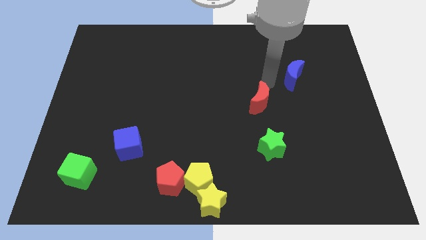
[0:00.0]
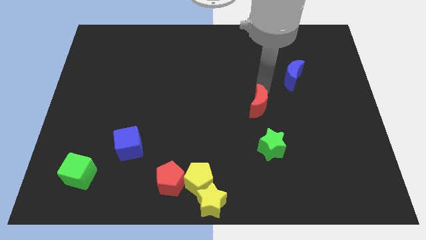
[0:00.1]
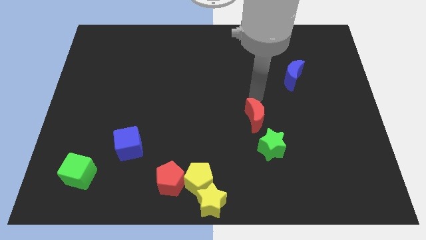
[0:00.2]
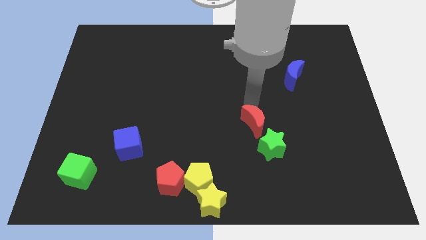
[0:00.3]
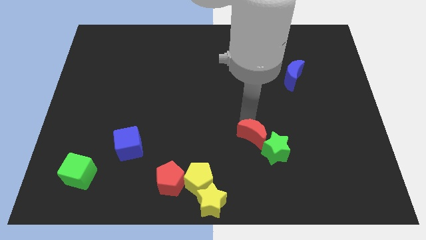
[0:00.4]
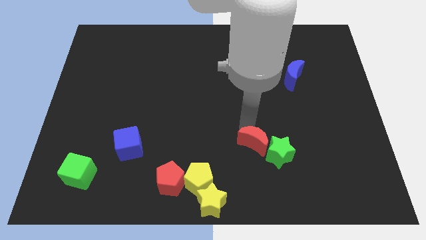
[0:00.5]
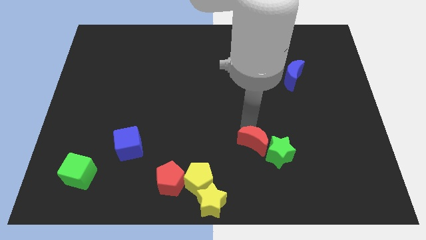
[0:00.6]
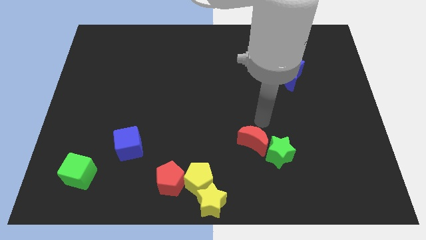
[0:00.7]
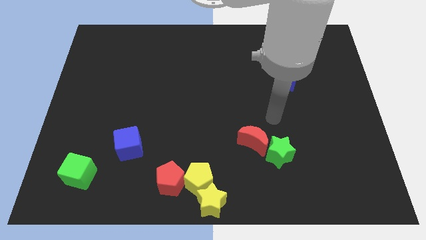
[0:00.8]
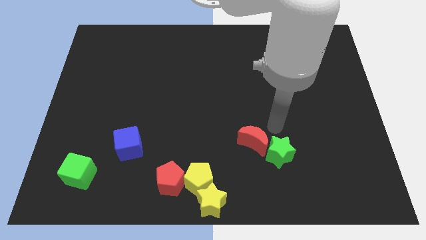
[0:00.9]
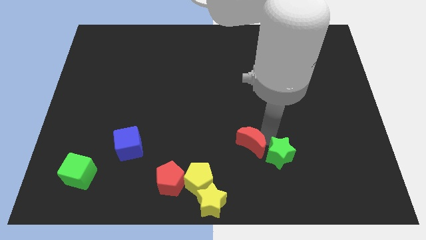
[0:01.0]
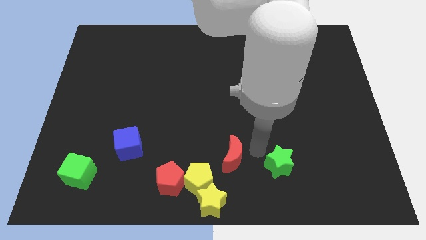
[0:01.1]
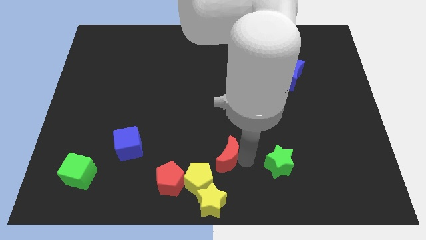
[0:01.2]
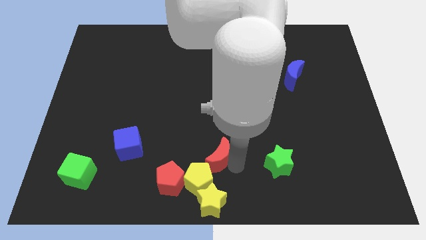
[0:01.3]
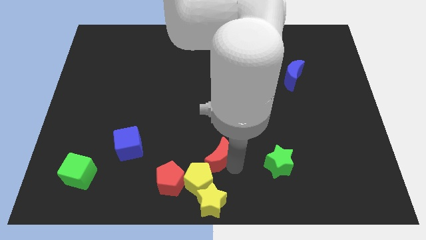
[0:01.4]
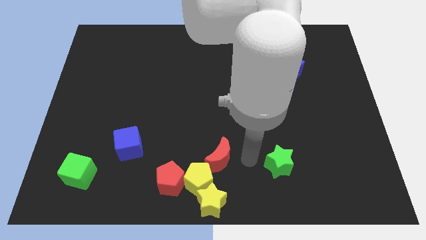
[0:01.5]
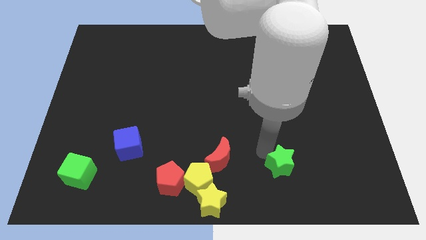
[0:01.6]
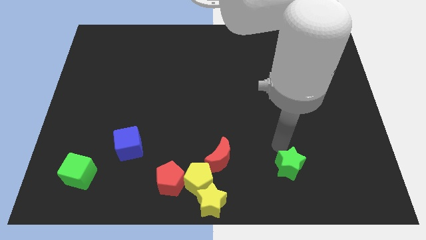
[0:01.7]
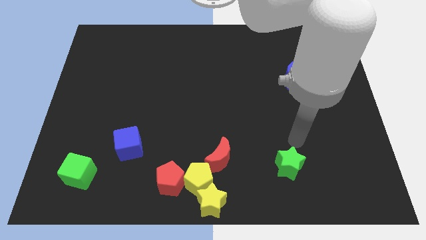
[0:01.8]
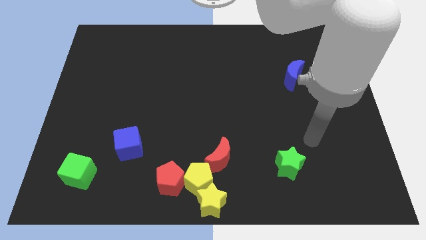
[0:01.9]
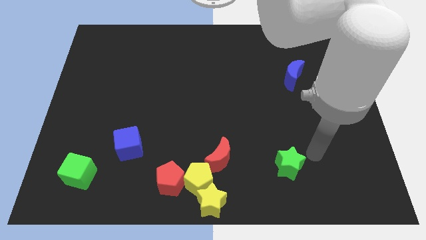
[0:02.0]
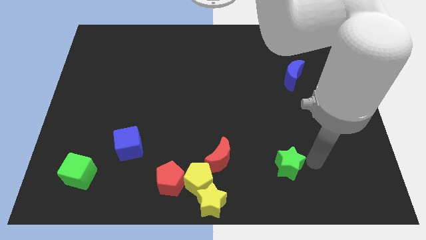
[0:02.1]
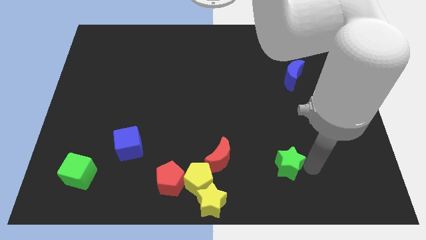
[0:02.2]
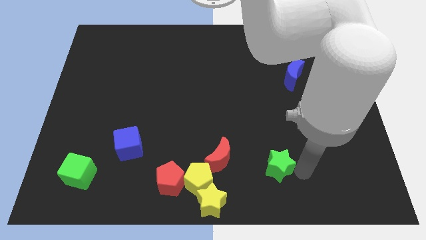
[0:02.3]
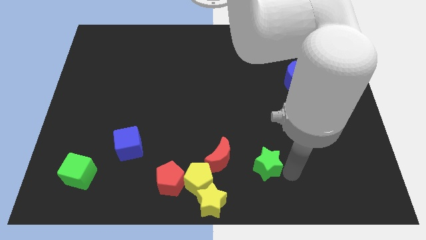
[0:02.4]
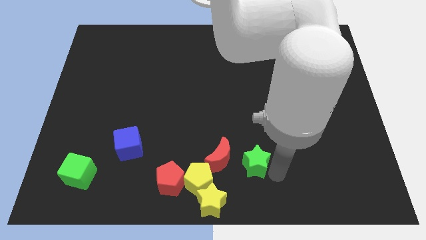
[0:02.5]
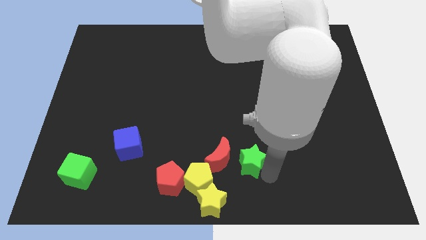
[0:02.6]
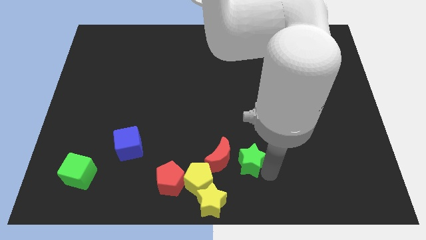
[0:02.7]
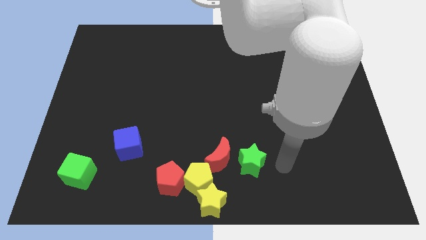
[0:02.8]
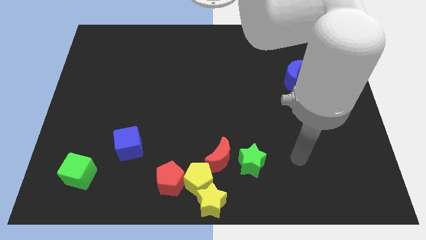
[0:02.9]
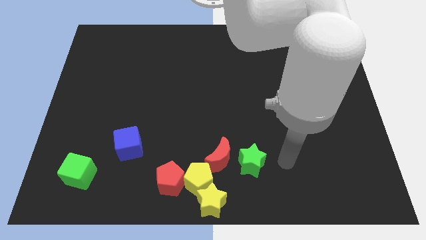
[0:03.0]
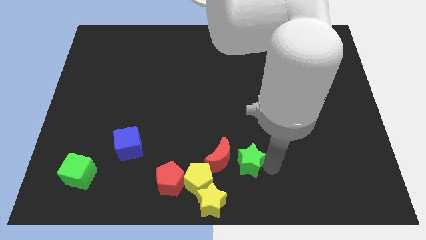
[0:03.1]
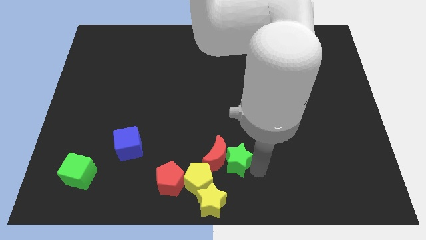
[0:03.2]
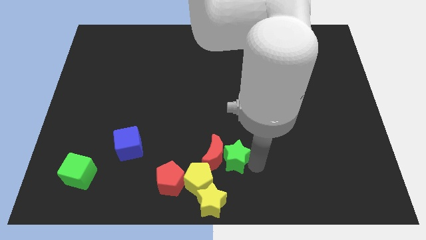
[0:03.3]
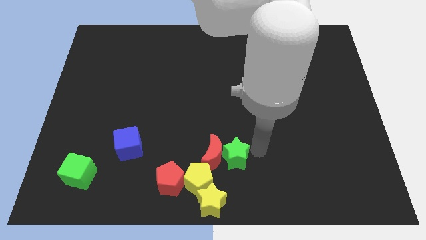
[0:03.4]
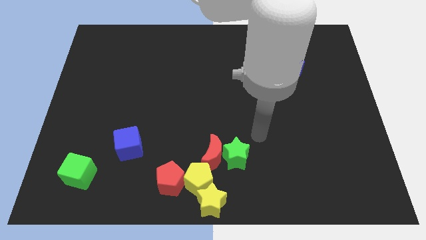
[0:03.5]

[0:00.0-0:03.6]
push the red crescent and green star to the bottom center of the board

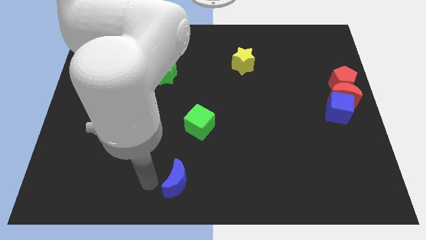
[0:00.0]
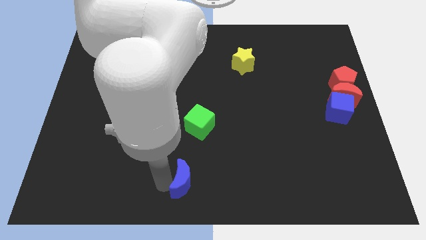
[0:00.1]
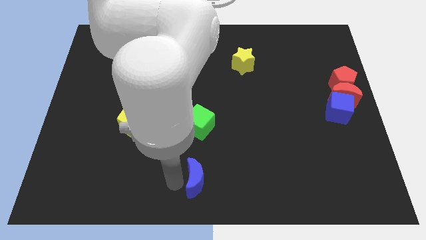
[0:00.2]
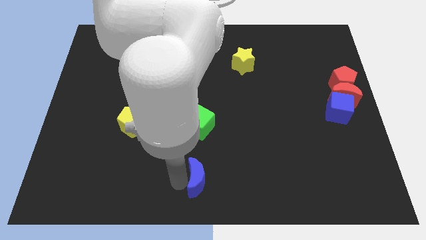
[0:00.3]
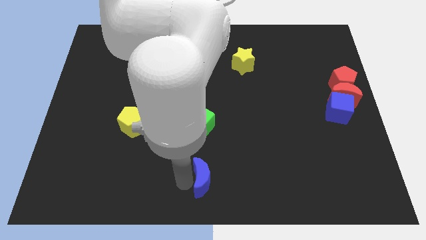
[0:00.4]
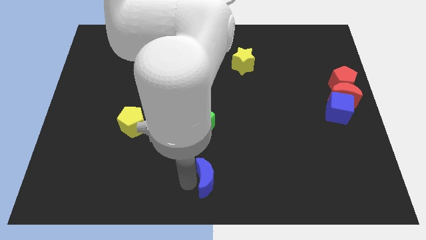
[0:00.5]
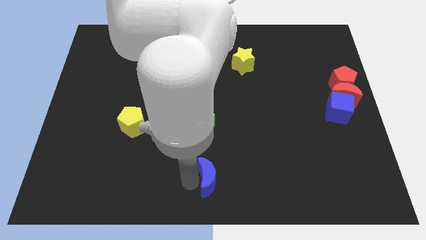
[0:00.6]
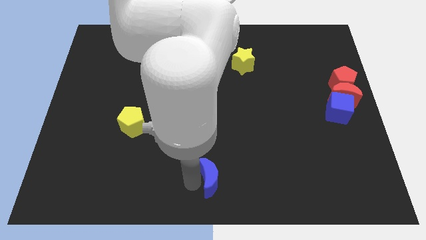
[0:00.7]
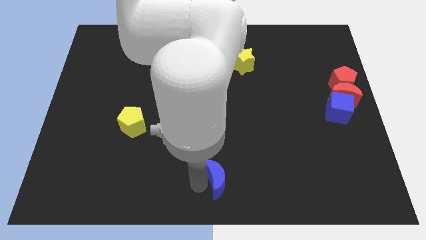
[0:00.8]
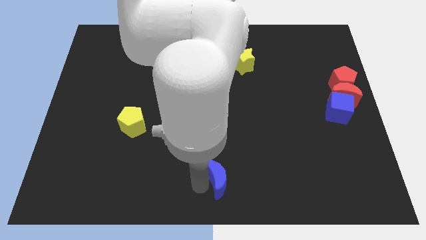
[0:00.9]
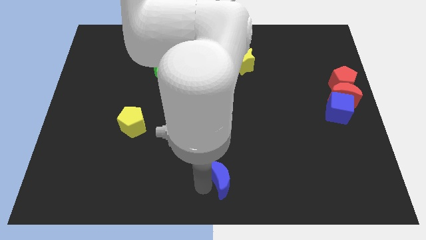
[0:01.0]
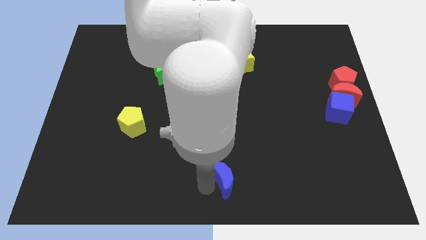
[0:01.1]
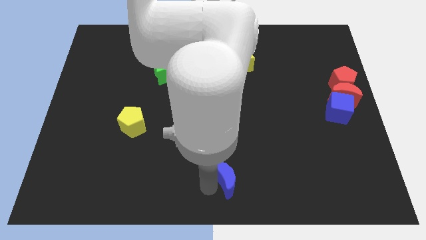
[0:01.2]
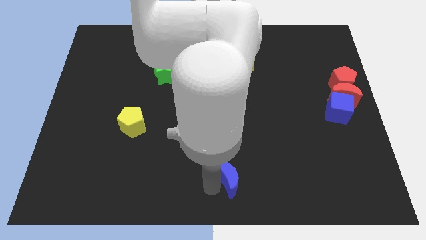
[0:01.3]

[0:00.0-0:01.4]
move the blue crescent to the right of the board

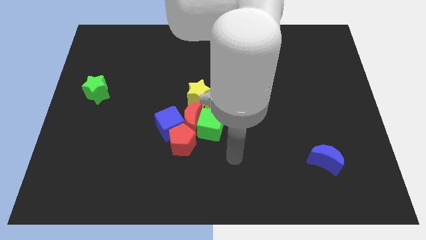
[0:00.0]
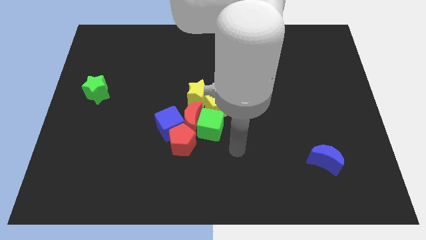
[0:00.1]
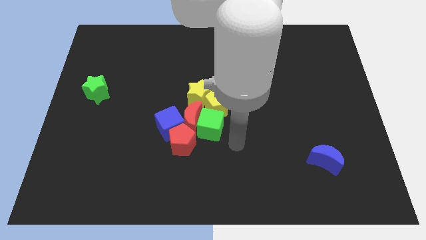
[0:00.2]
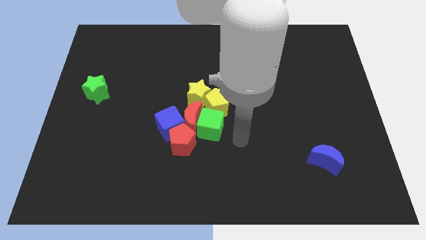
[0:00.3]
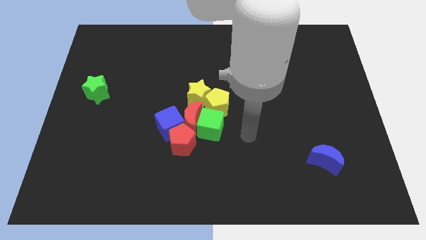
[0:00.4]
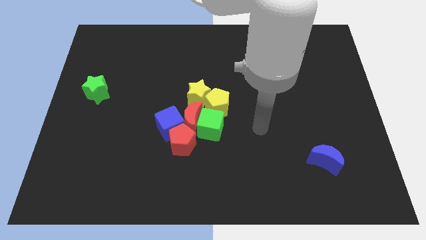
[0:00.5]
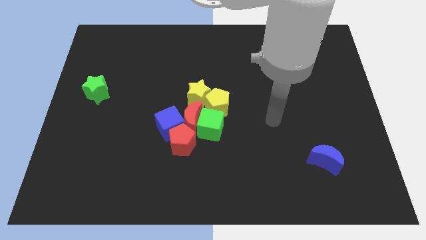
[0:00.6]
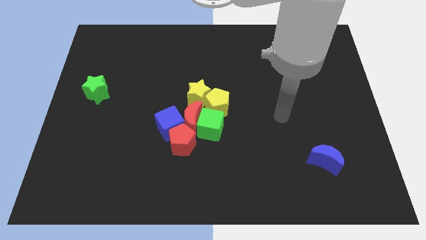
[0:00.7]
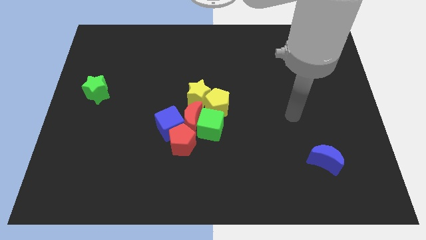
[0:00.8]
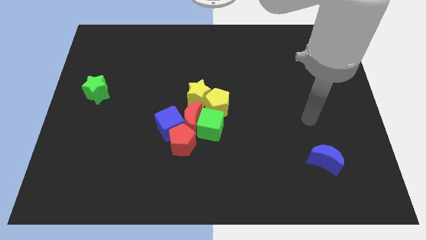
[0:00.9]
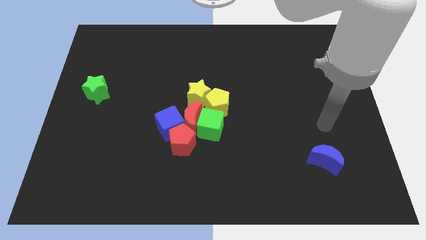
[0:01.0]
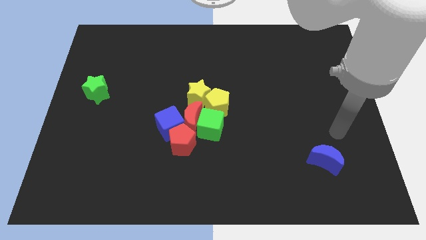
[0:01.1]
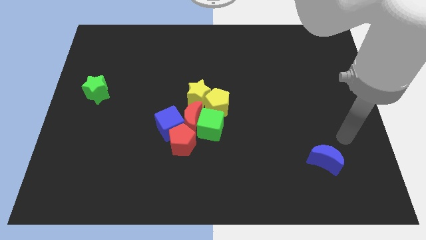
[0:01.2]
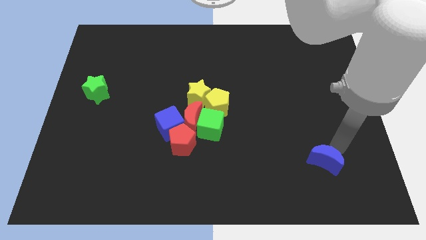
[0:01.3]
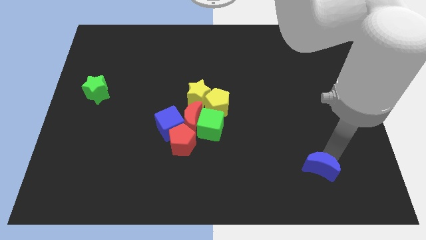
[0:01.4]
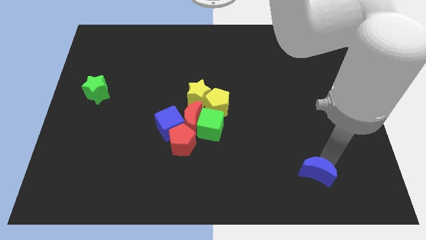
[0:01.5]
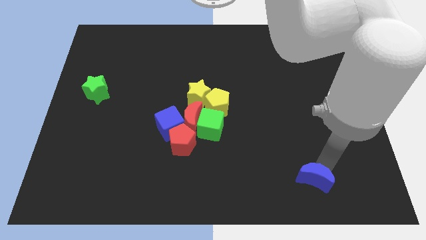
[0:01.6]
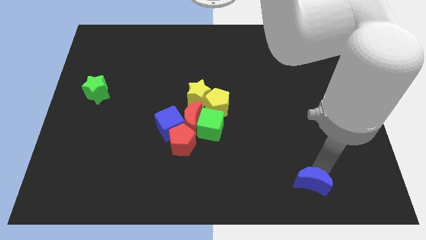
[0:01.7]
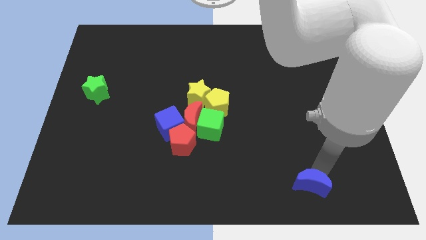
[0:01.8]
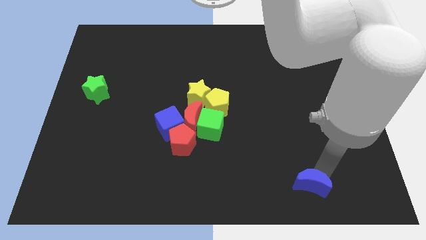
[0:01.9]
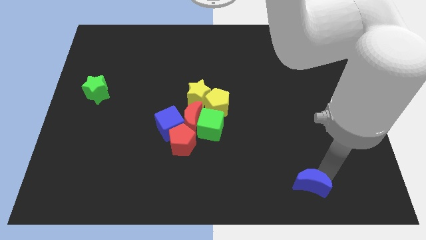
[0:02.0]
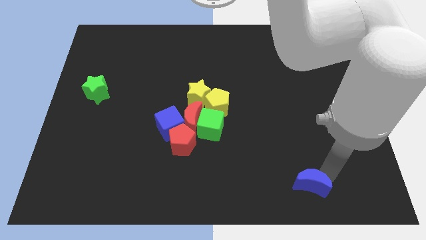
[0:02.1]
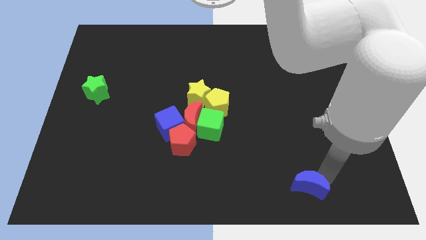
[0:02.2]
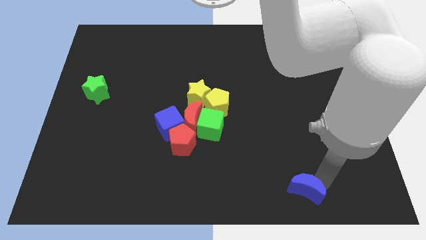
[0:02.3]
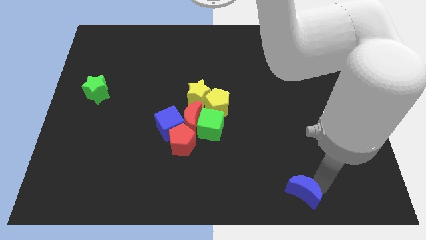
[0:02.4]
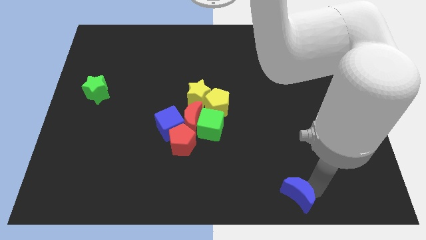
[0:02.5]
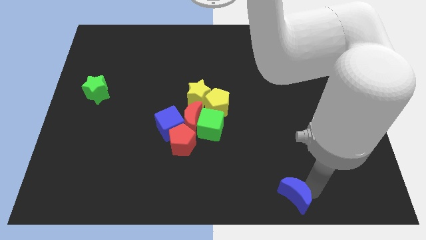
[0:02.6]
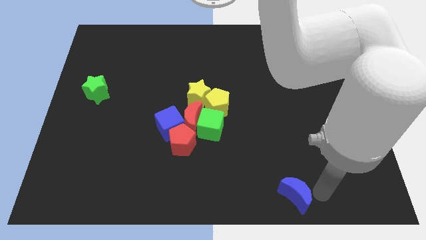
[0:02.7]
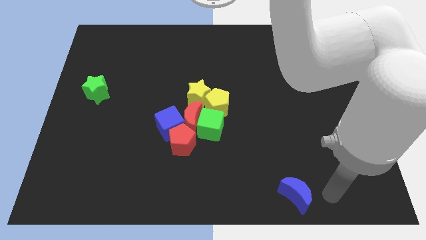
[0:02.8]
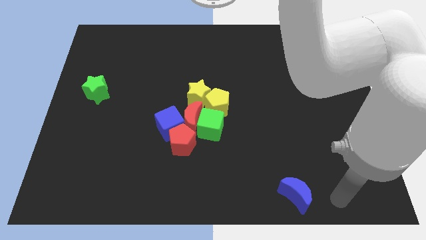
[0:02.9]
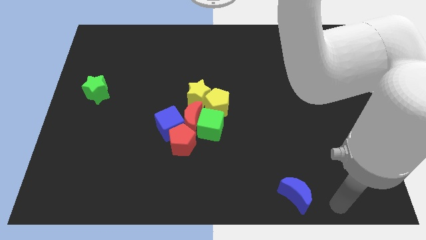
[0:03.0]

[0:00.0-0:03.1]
move blue moon to the bottom center

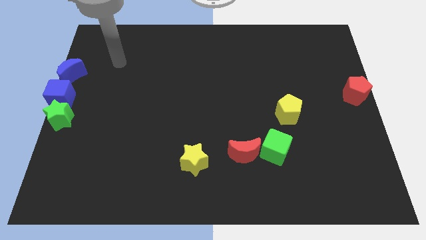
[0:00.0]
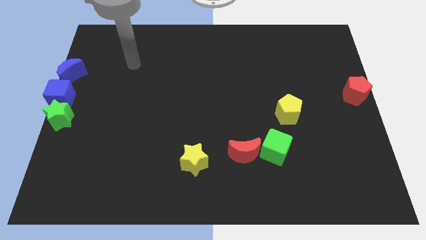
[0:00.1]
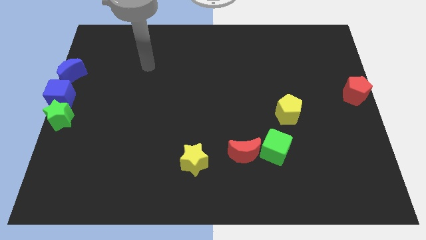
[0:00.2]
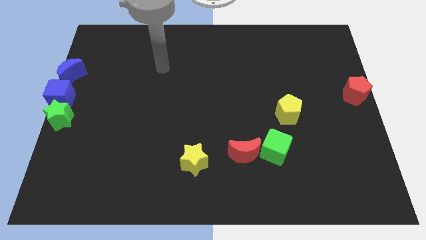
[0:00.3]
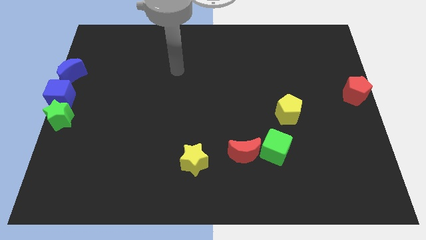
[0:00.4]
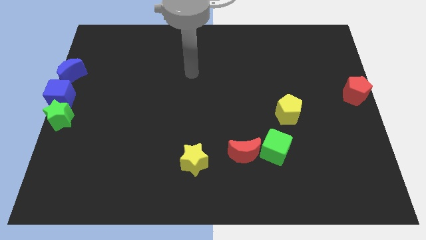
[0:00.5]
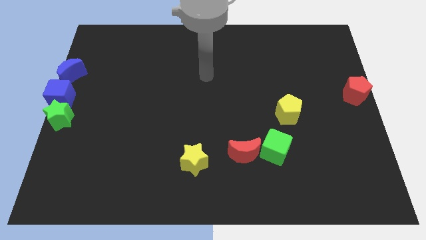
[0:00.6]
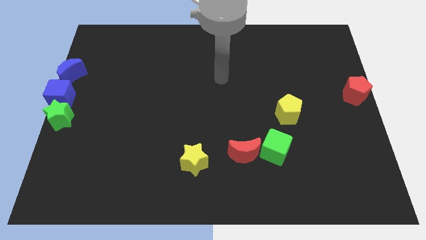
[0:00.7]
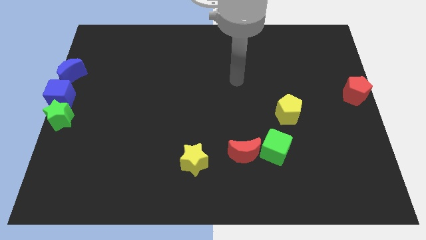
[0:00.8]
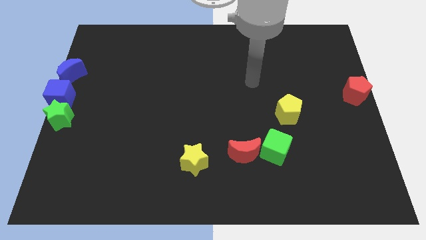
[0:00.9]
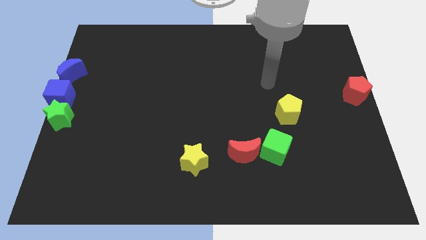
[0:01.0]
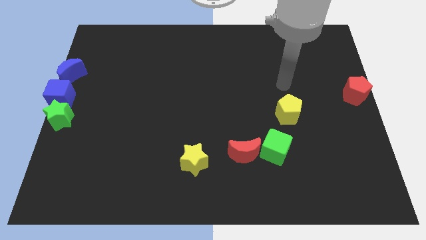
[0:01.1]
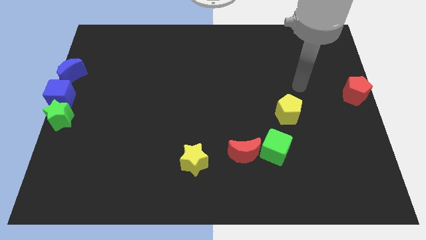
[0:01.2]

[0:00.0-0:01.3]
point your arm at the top of the yellow pentagon
